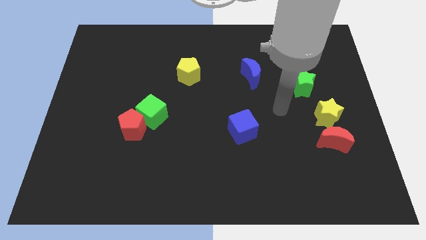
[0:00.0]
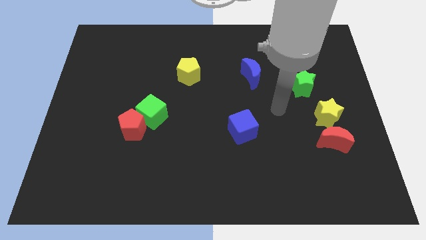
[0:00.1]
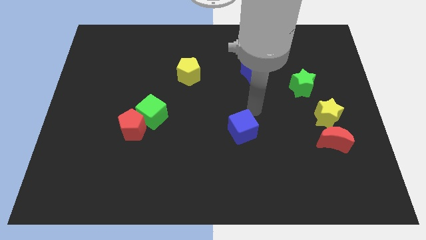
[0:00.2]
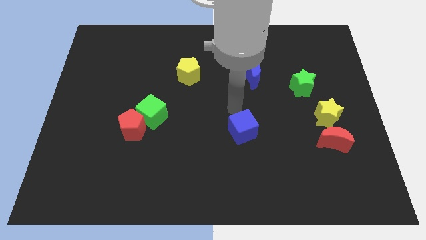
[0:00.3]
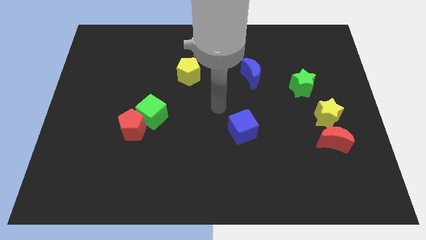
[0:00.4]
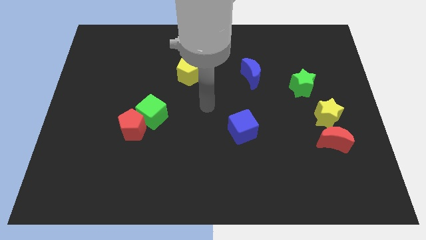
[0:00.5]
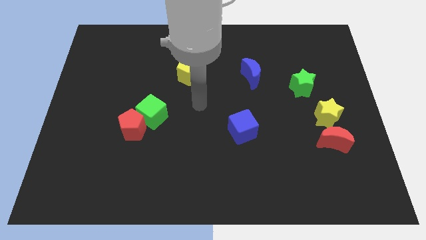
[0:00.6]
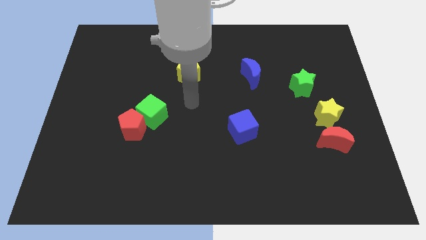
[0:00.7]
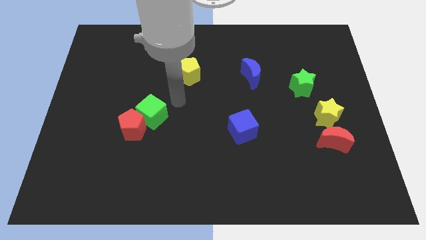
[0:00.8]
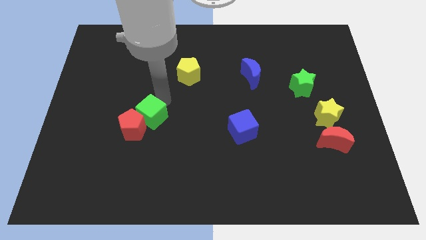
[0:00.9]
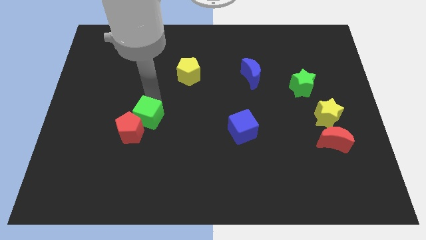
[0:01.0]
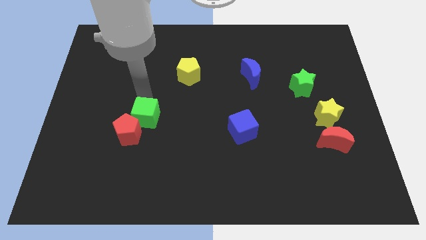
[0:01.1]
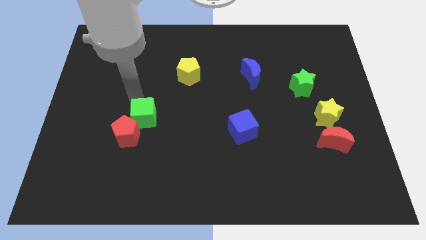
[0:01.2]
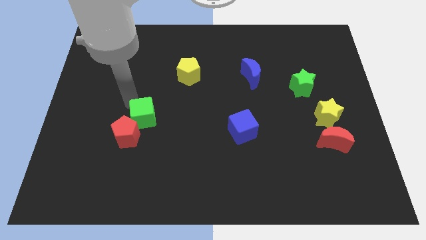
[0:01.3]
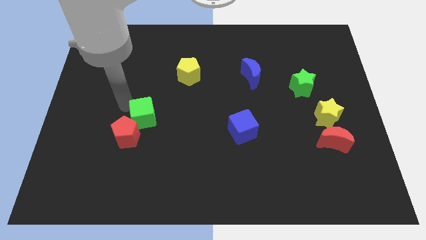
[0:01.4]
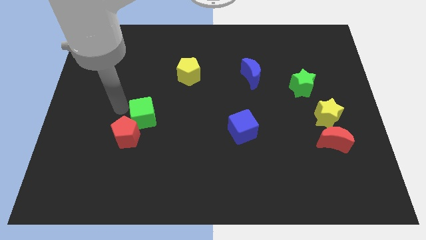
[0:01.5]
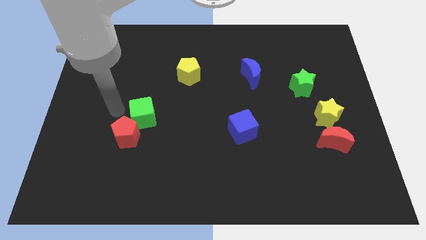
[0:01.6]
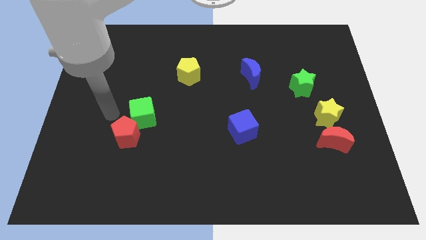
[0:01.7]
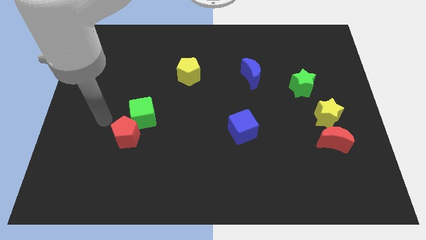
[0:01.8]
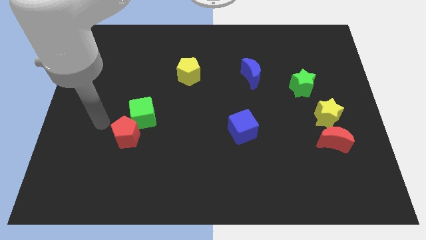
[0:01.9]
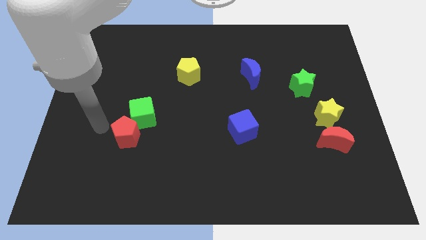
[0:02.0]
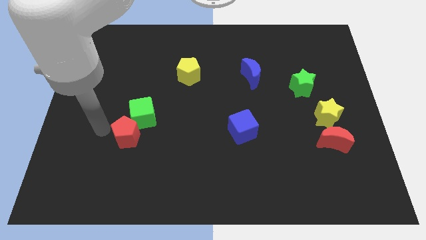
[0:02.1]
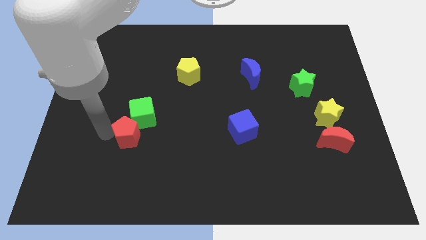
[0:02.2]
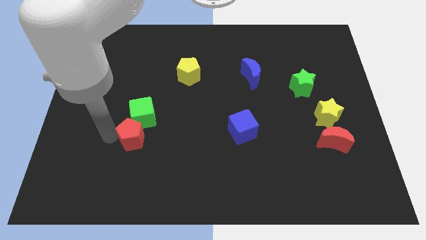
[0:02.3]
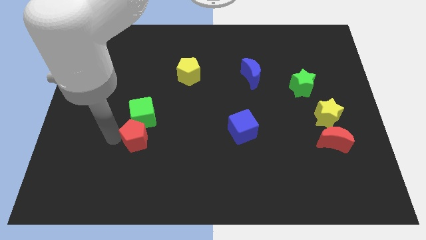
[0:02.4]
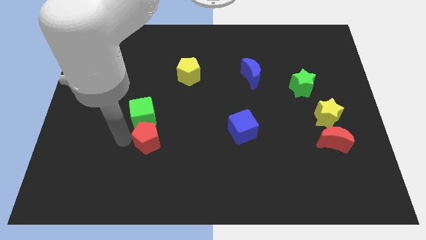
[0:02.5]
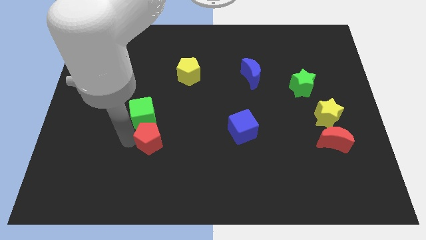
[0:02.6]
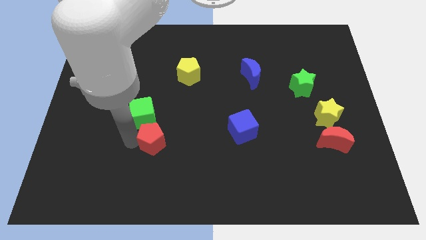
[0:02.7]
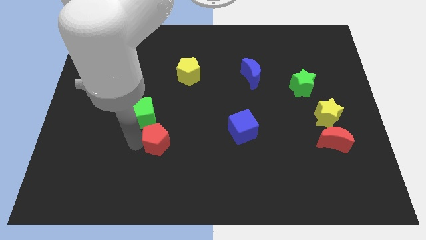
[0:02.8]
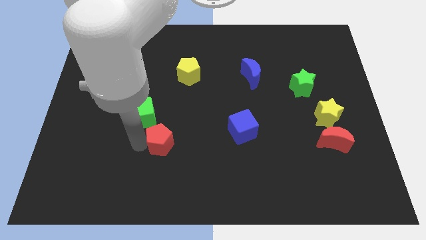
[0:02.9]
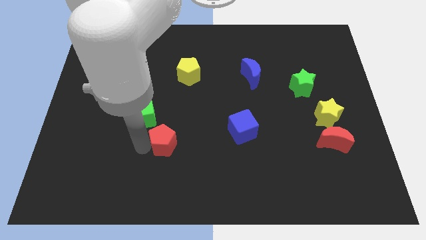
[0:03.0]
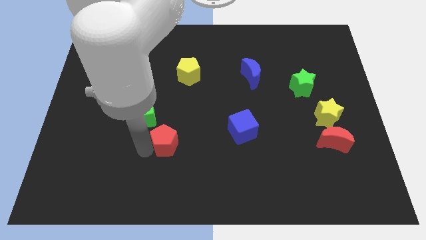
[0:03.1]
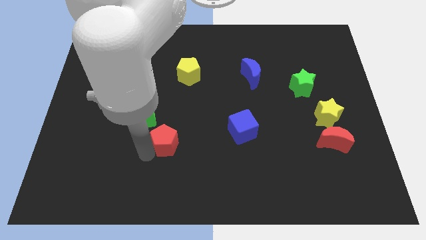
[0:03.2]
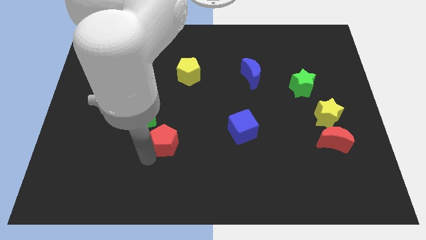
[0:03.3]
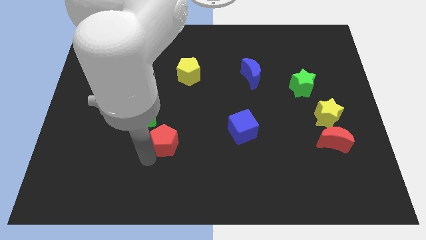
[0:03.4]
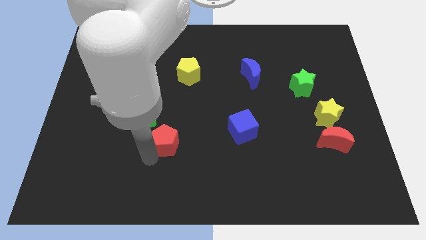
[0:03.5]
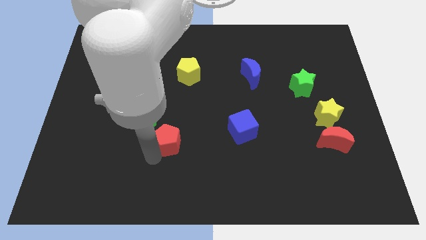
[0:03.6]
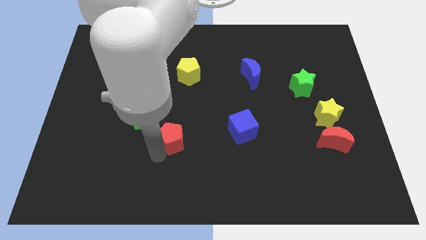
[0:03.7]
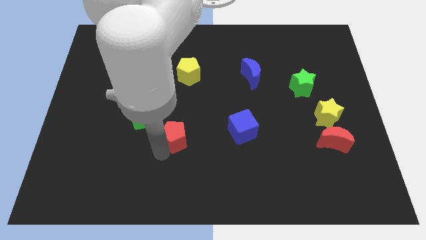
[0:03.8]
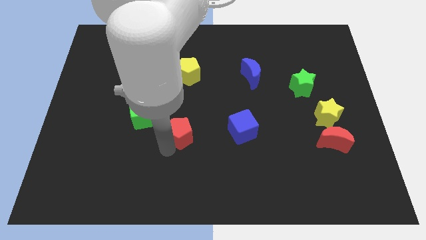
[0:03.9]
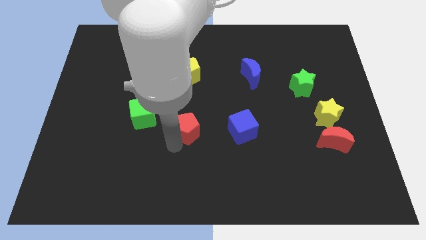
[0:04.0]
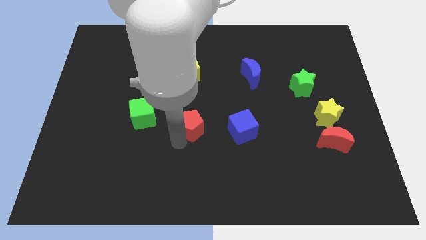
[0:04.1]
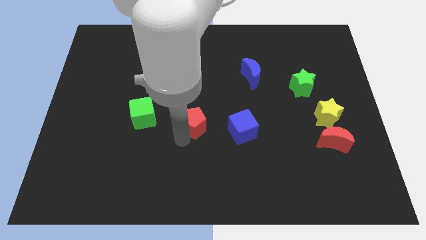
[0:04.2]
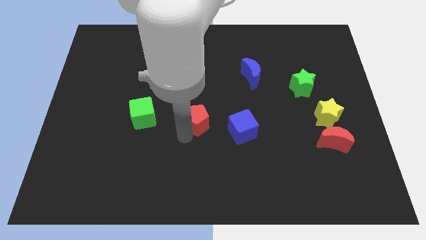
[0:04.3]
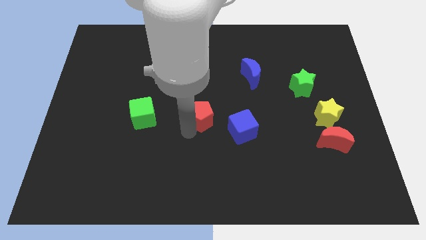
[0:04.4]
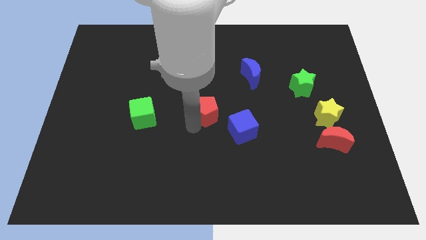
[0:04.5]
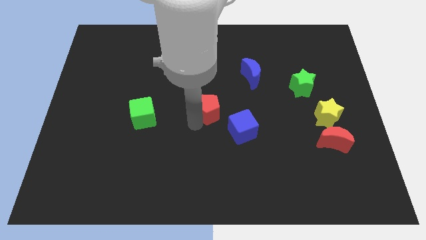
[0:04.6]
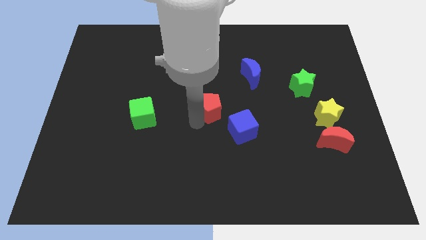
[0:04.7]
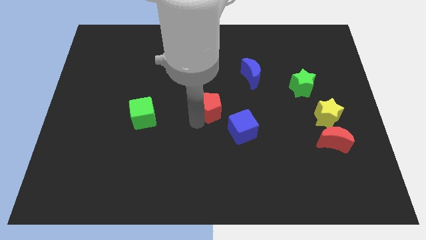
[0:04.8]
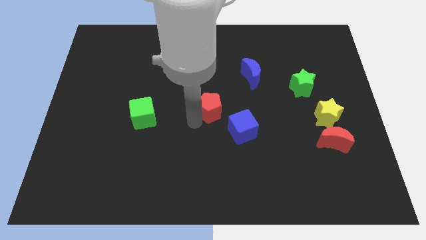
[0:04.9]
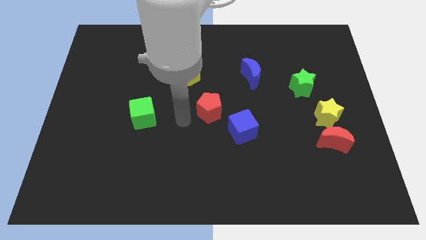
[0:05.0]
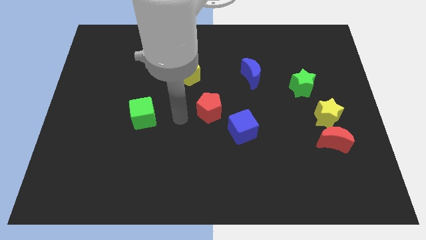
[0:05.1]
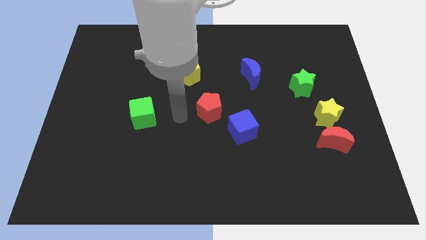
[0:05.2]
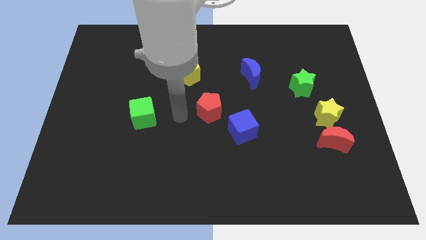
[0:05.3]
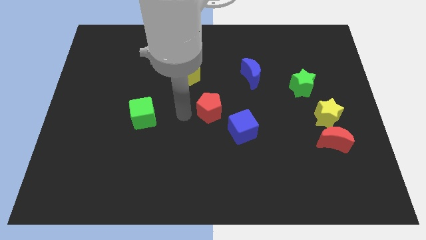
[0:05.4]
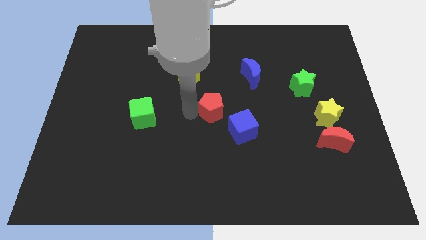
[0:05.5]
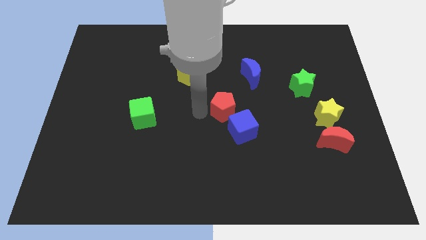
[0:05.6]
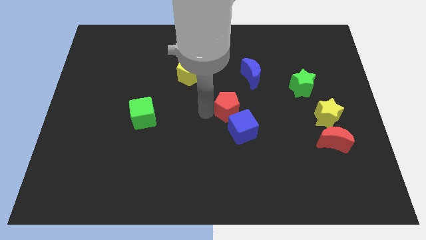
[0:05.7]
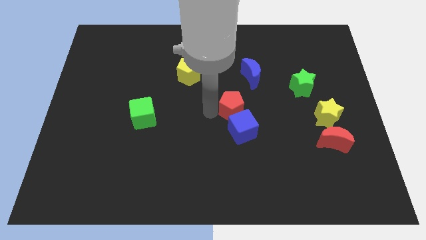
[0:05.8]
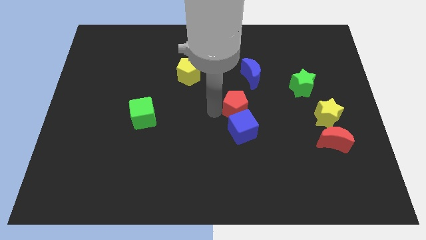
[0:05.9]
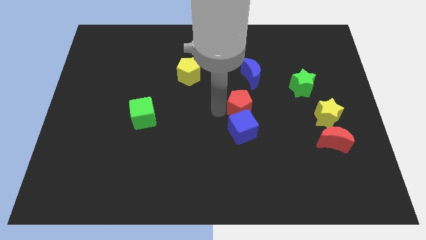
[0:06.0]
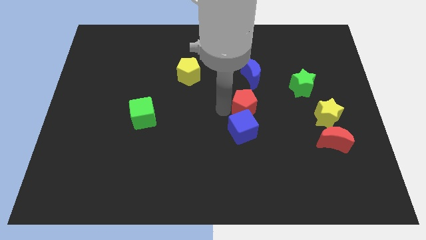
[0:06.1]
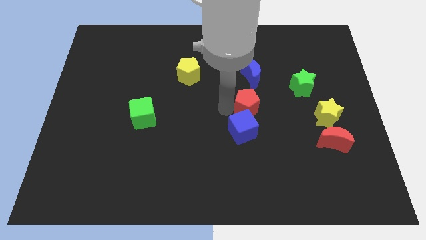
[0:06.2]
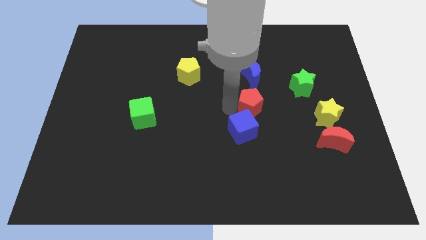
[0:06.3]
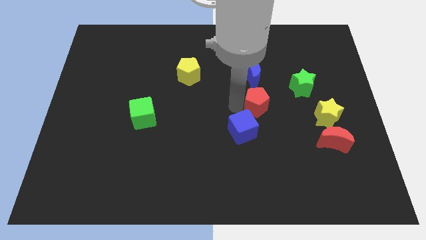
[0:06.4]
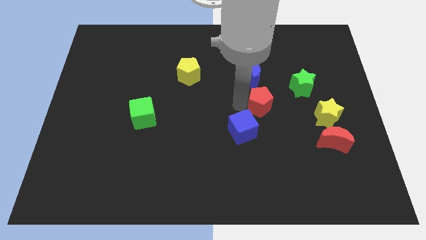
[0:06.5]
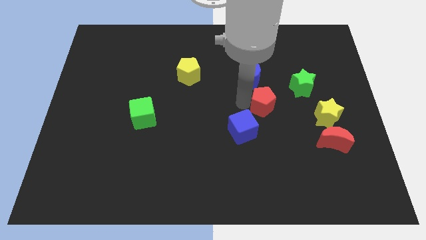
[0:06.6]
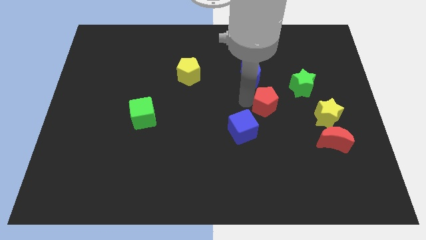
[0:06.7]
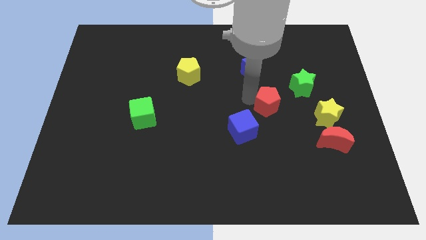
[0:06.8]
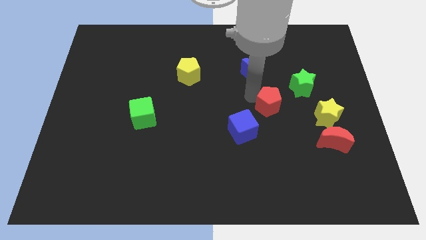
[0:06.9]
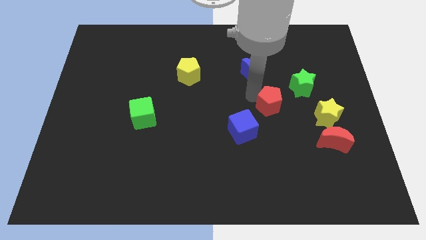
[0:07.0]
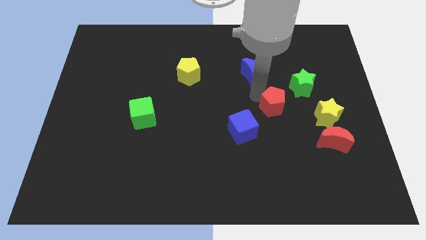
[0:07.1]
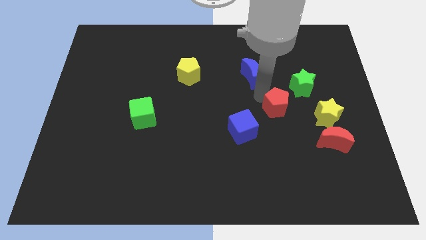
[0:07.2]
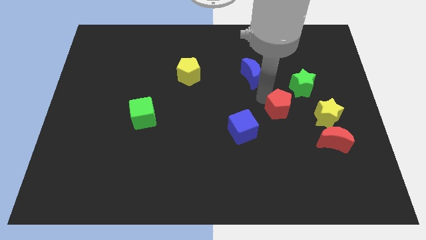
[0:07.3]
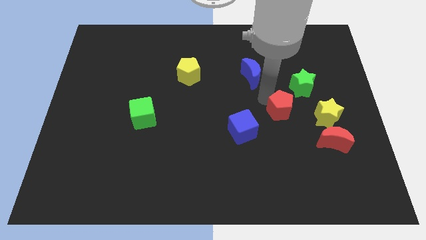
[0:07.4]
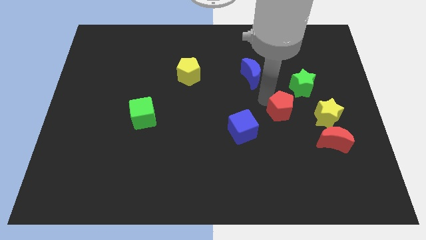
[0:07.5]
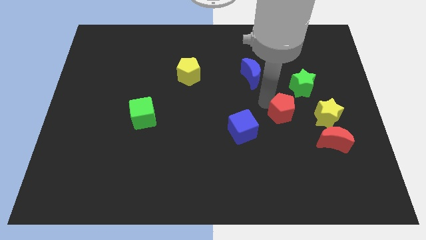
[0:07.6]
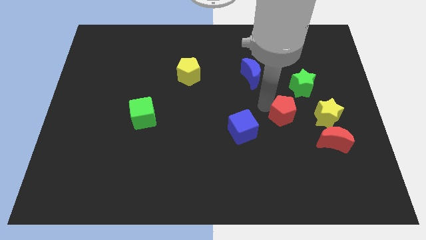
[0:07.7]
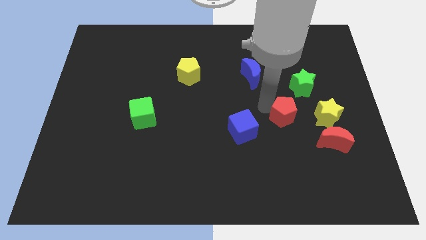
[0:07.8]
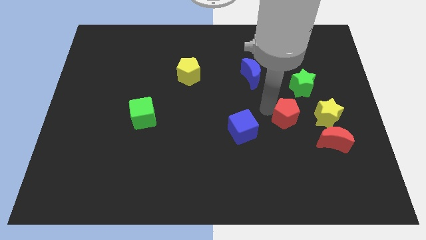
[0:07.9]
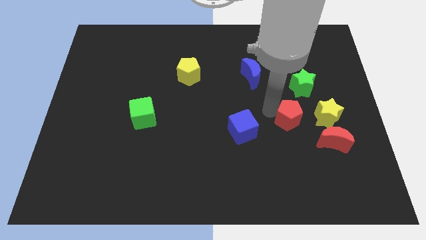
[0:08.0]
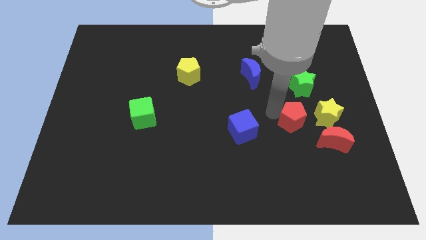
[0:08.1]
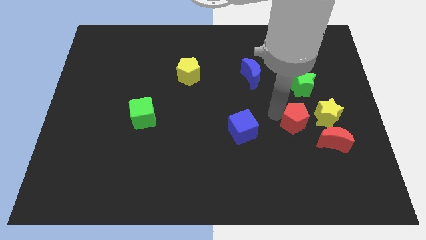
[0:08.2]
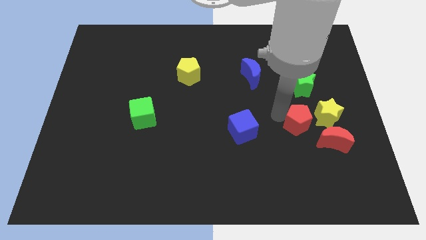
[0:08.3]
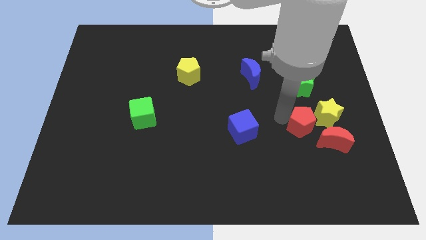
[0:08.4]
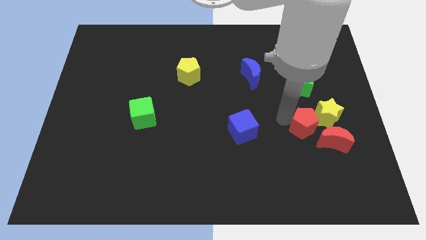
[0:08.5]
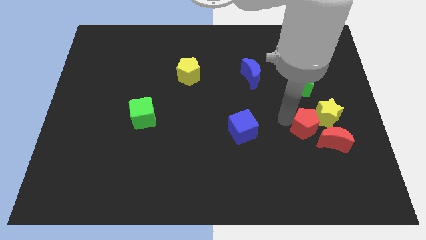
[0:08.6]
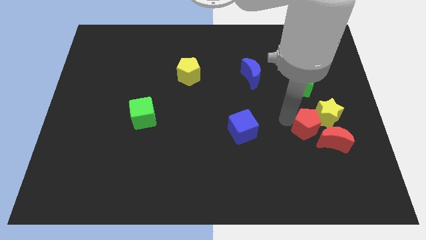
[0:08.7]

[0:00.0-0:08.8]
put the red pentagon towards the yellow star
